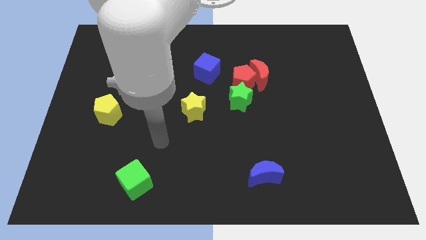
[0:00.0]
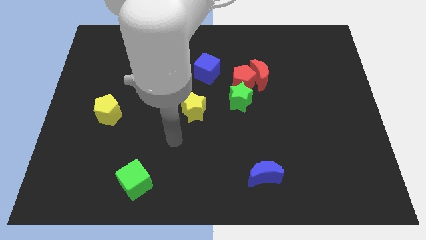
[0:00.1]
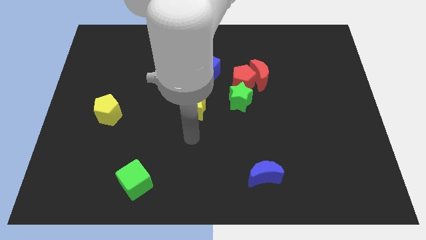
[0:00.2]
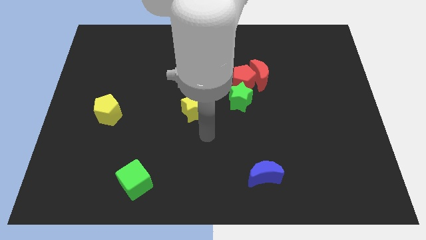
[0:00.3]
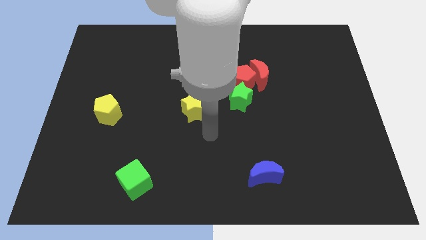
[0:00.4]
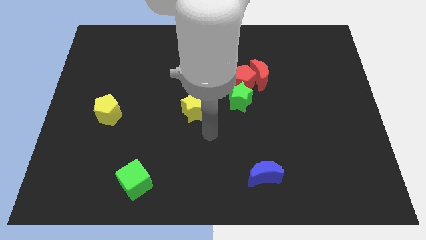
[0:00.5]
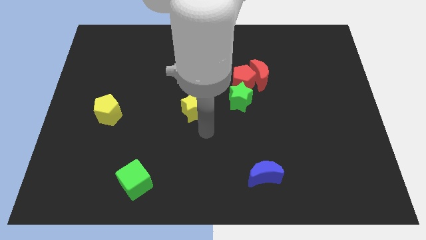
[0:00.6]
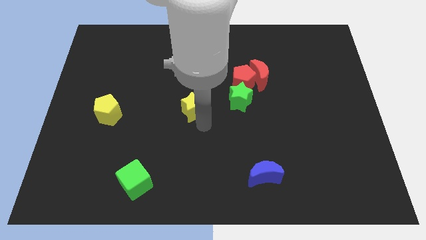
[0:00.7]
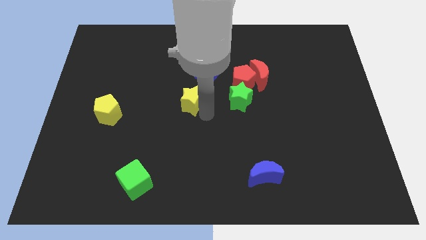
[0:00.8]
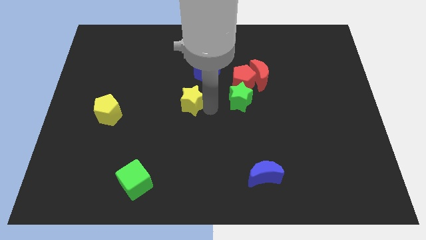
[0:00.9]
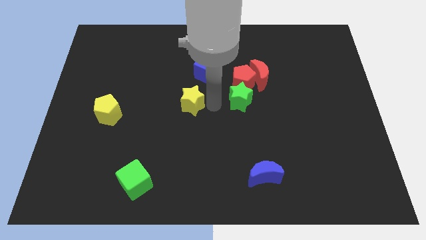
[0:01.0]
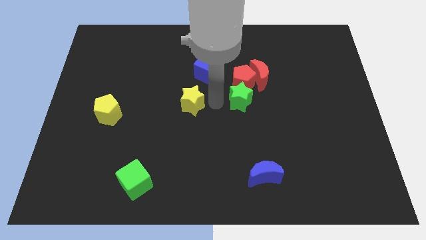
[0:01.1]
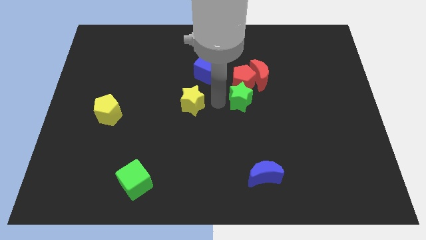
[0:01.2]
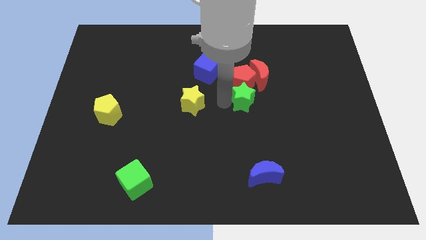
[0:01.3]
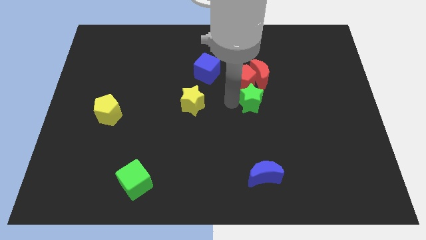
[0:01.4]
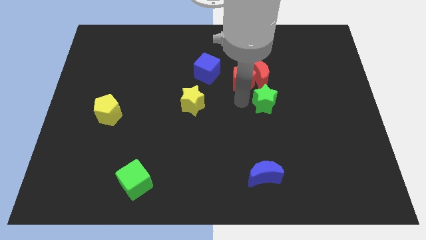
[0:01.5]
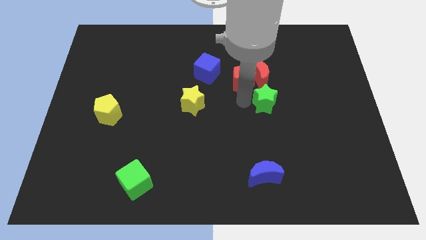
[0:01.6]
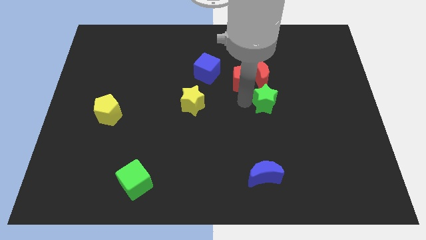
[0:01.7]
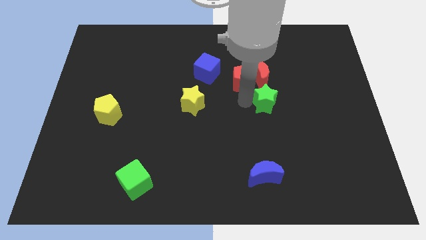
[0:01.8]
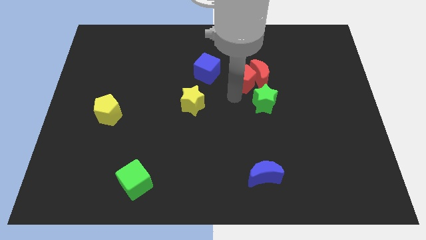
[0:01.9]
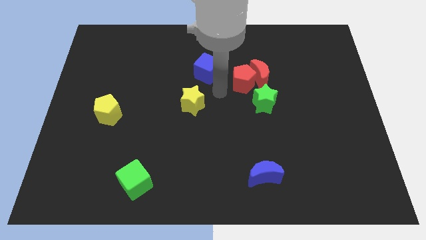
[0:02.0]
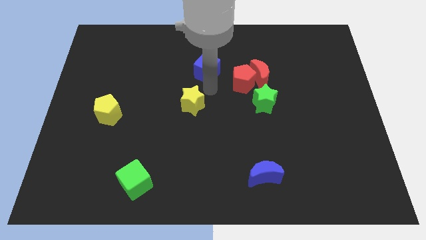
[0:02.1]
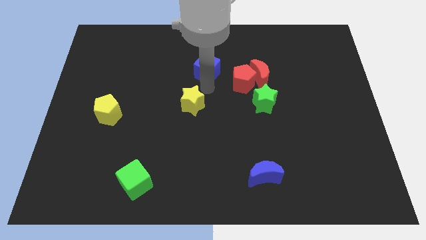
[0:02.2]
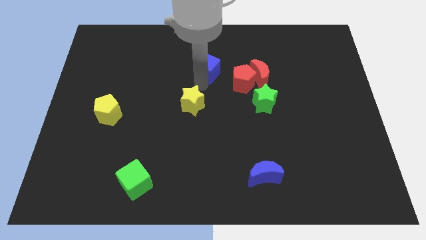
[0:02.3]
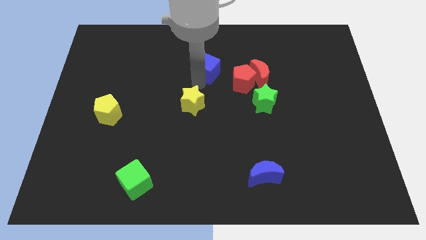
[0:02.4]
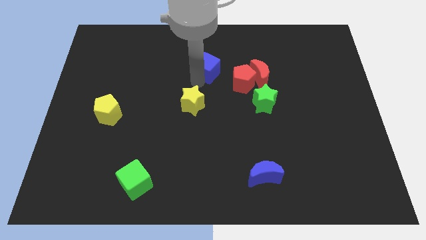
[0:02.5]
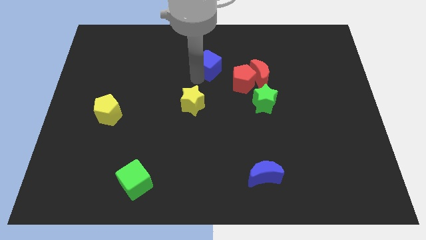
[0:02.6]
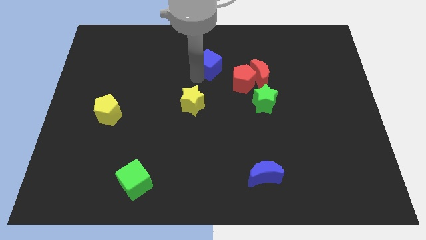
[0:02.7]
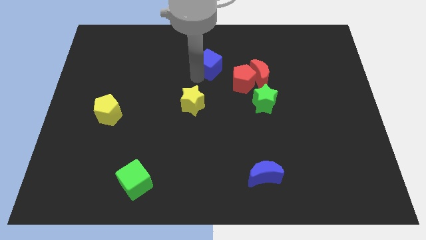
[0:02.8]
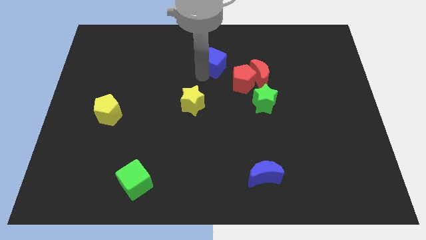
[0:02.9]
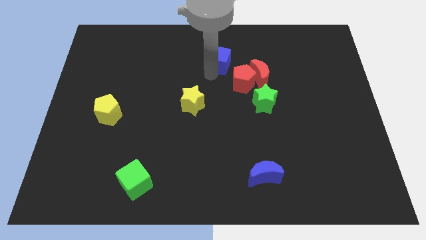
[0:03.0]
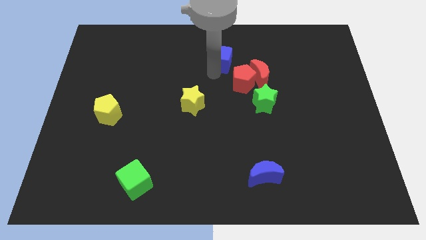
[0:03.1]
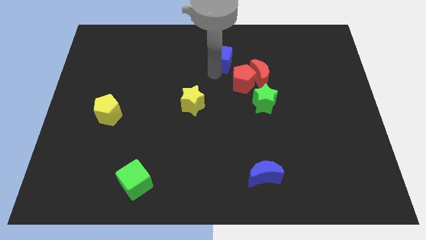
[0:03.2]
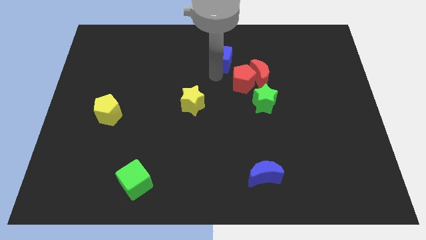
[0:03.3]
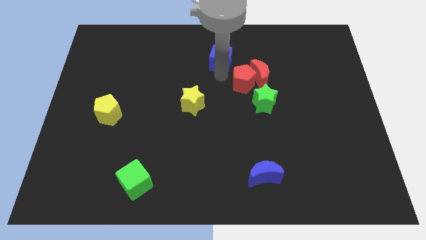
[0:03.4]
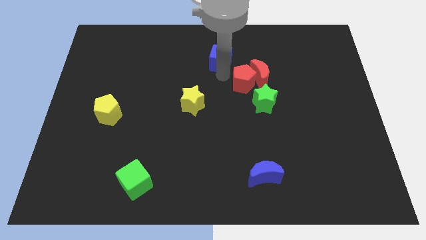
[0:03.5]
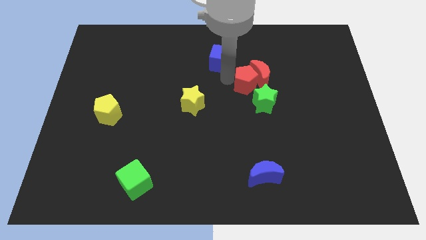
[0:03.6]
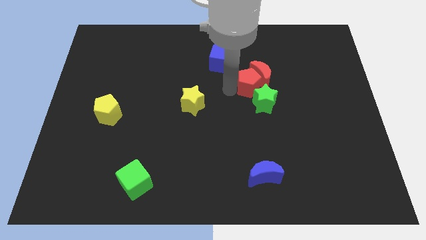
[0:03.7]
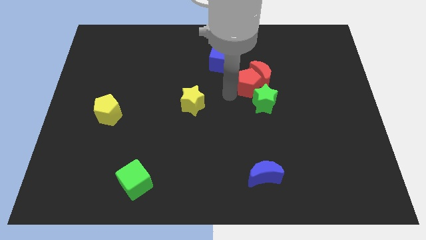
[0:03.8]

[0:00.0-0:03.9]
point your arm left to red pentagon

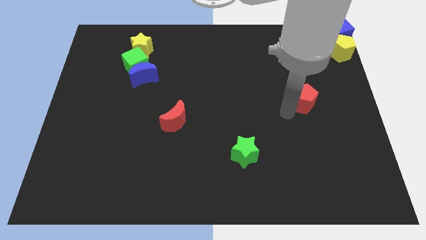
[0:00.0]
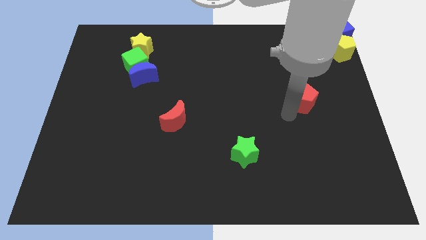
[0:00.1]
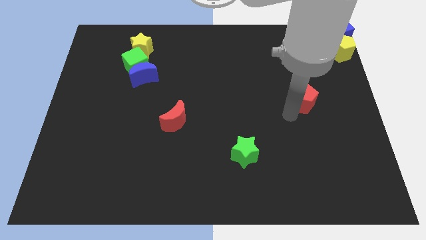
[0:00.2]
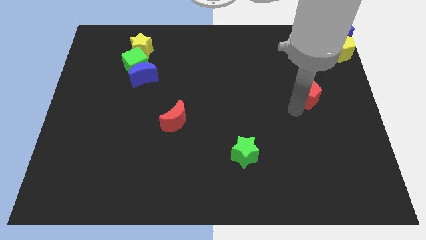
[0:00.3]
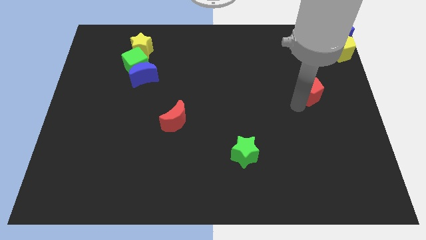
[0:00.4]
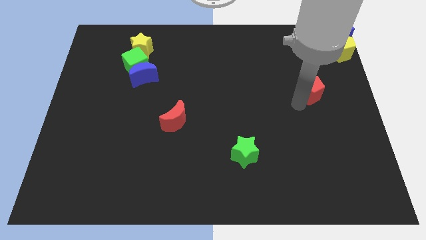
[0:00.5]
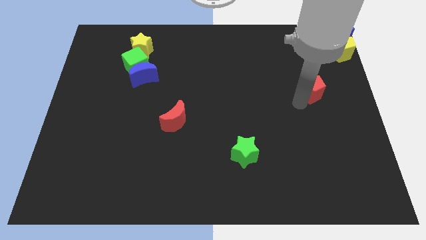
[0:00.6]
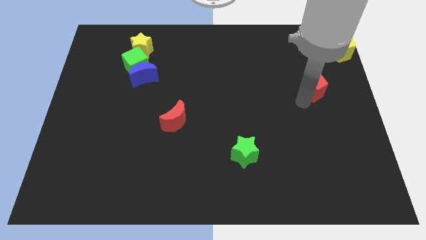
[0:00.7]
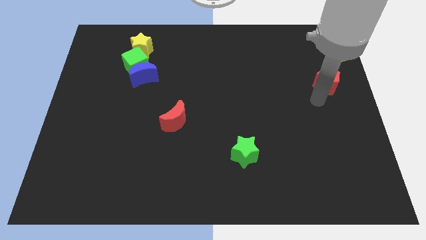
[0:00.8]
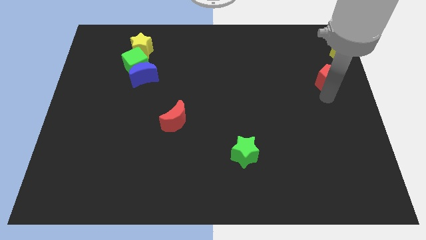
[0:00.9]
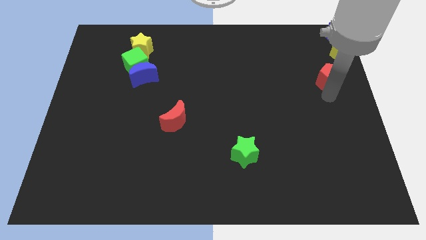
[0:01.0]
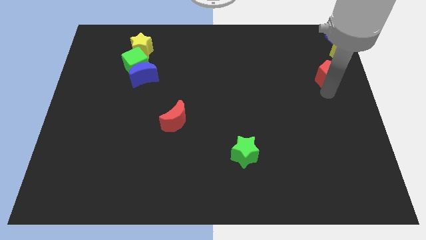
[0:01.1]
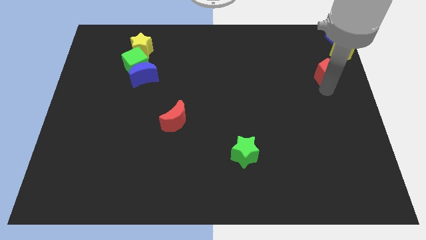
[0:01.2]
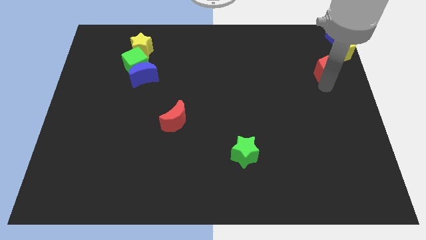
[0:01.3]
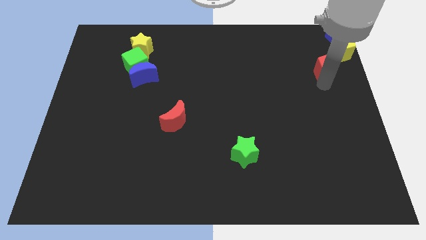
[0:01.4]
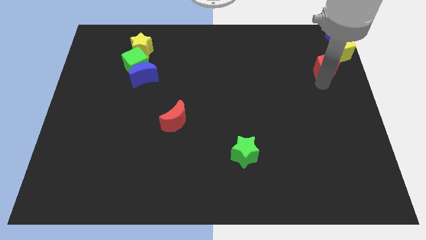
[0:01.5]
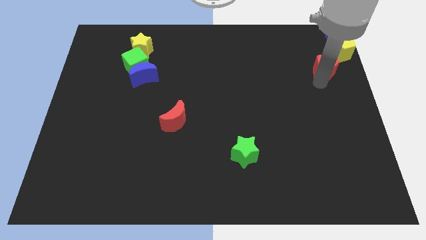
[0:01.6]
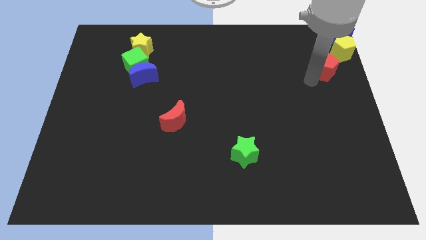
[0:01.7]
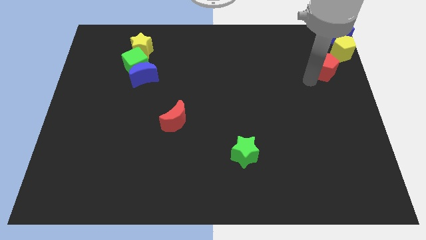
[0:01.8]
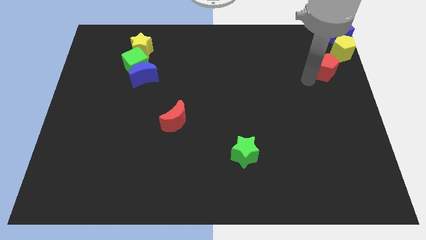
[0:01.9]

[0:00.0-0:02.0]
push the red pentagon towards the yellow pentagon

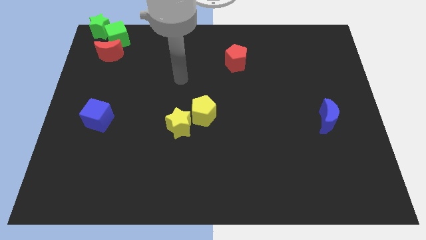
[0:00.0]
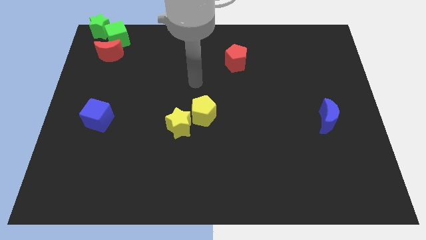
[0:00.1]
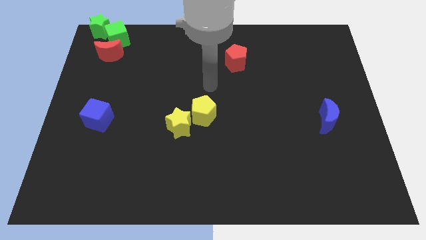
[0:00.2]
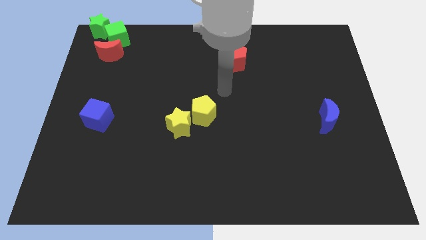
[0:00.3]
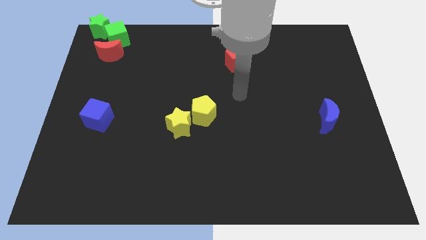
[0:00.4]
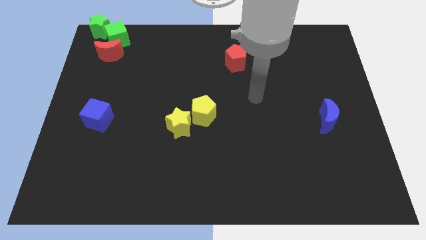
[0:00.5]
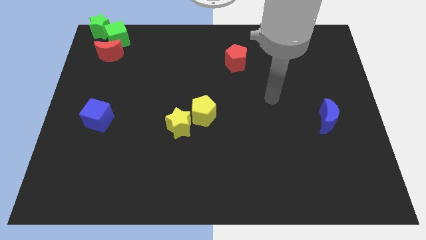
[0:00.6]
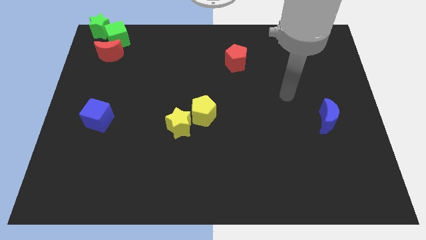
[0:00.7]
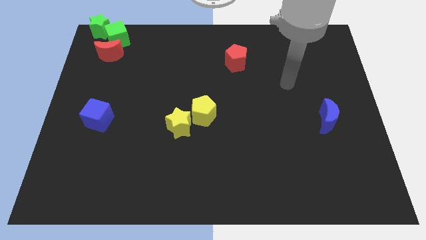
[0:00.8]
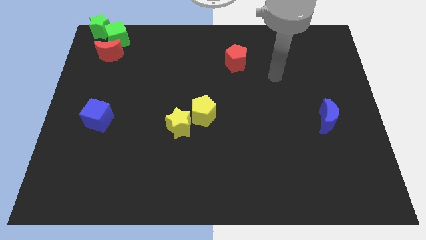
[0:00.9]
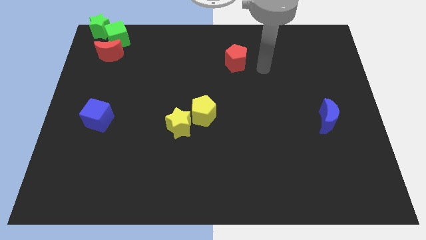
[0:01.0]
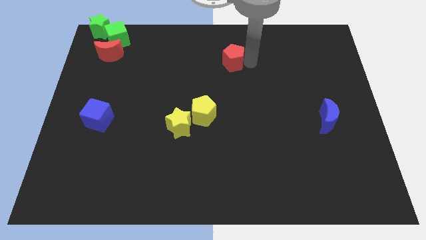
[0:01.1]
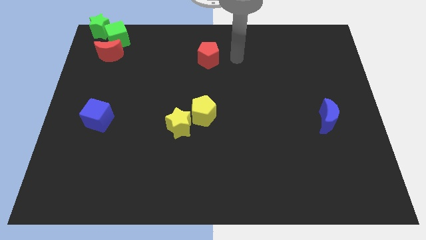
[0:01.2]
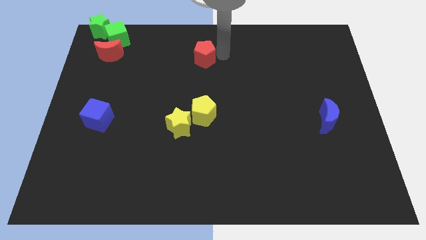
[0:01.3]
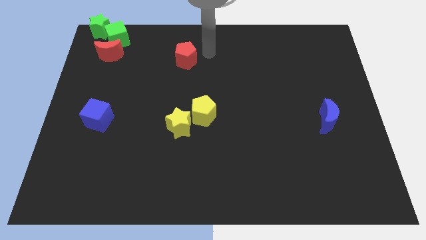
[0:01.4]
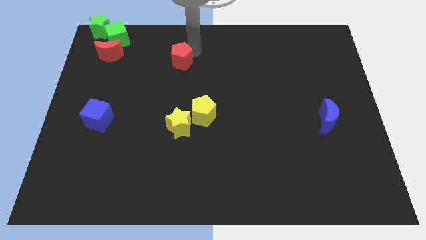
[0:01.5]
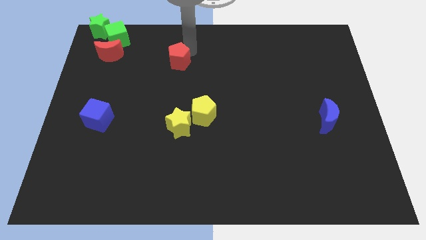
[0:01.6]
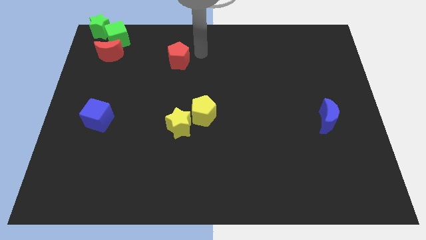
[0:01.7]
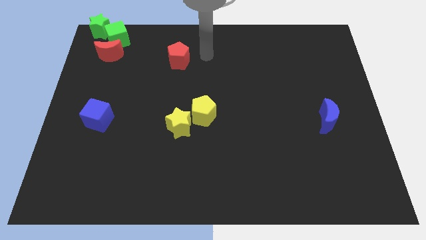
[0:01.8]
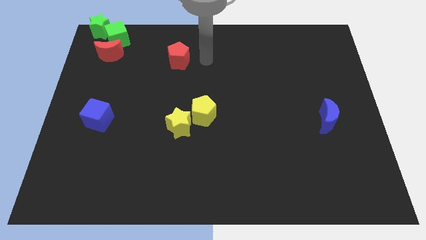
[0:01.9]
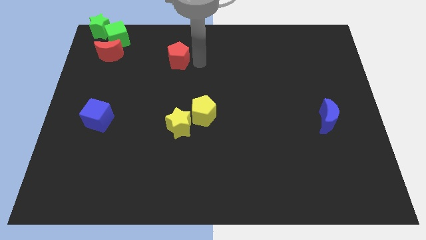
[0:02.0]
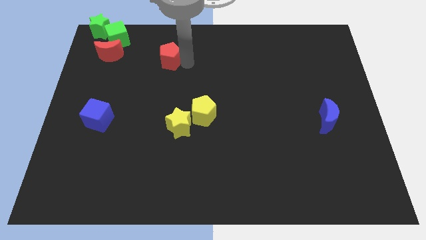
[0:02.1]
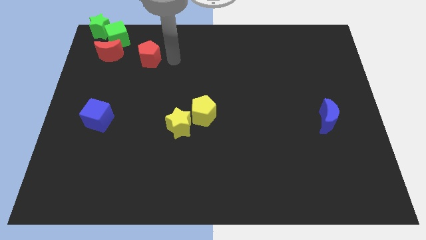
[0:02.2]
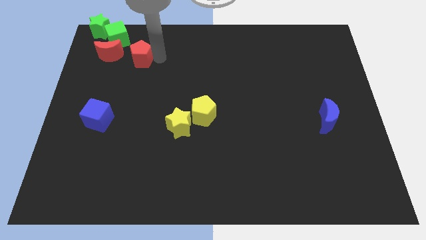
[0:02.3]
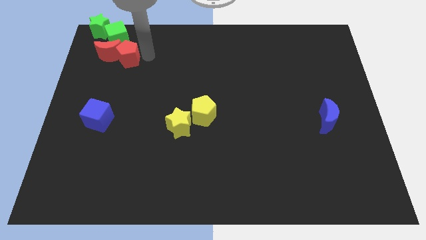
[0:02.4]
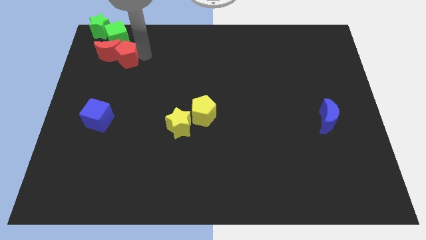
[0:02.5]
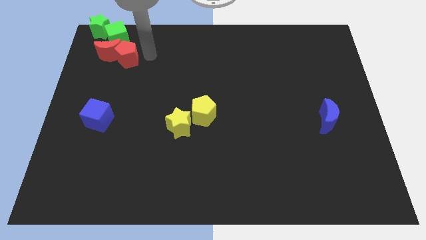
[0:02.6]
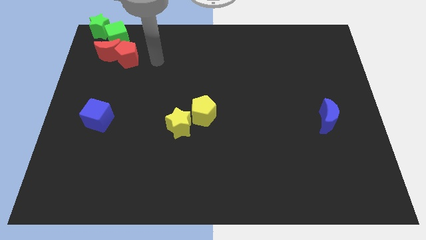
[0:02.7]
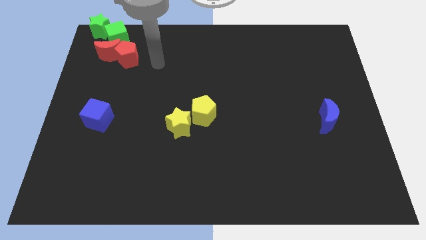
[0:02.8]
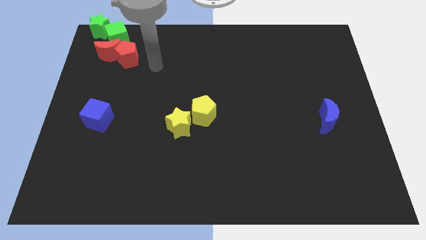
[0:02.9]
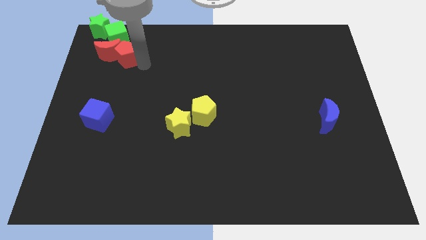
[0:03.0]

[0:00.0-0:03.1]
add red pentagon into red moon

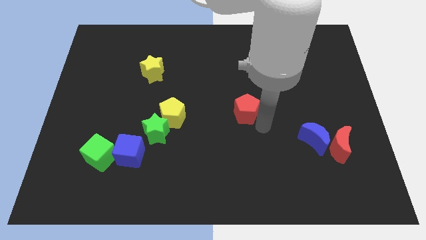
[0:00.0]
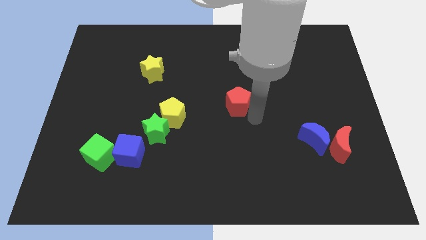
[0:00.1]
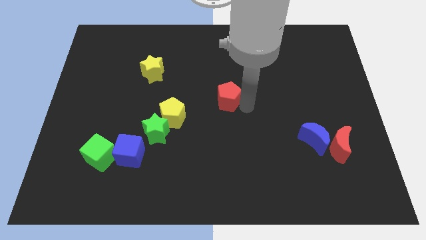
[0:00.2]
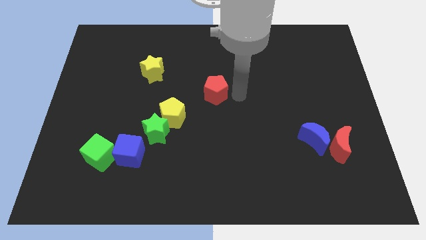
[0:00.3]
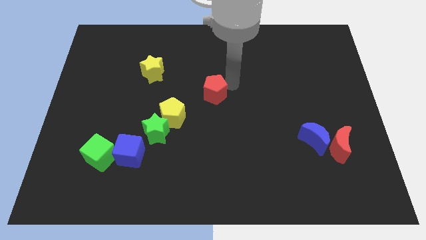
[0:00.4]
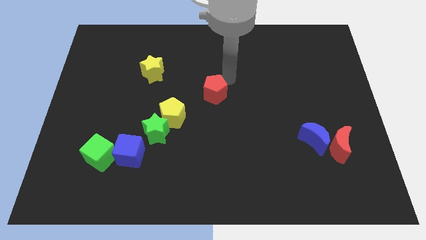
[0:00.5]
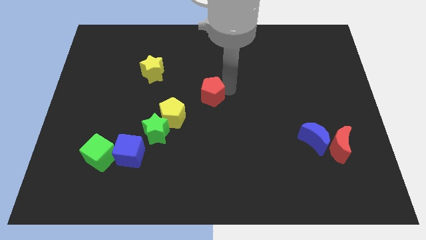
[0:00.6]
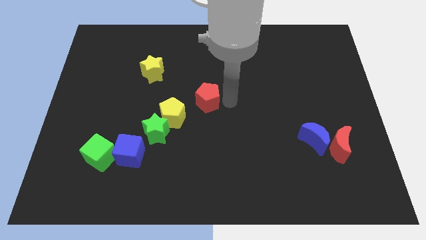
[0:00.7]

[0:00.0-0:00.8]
move the red pentagon slightly to the center of the board
